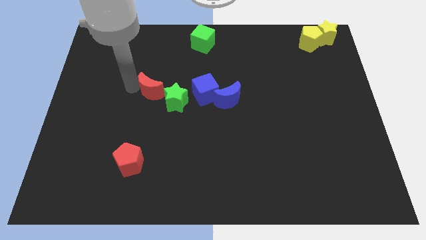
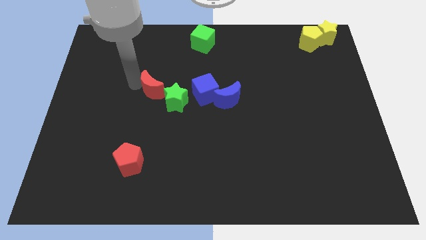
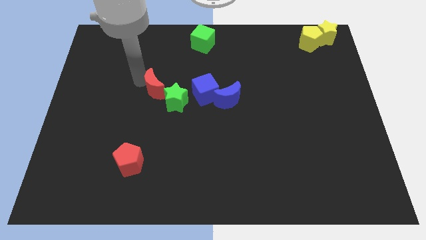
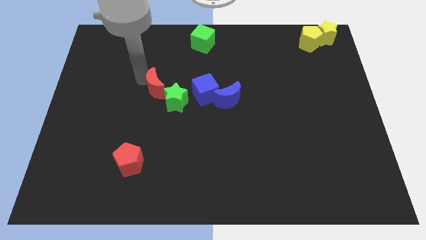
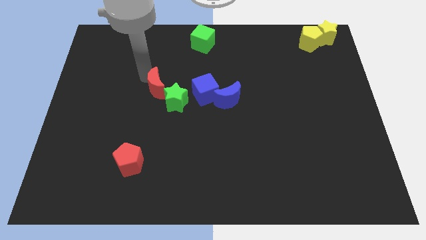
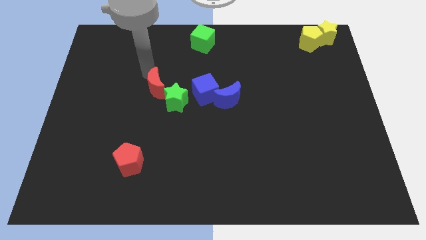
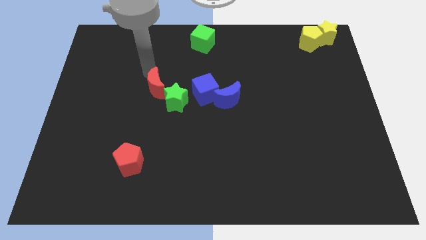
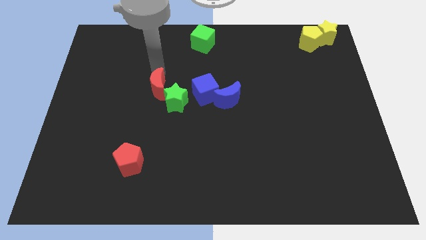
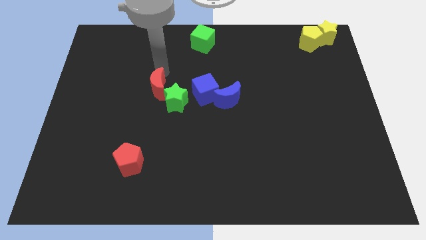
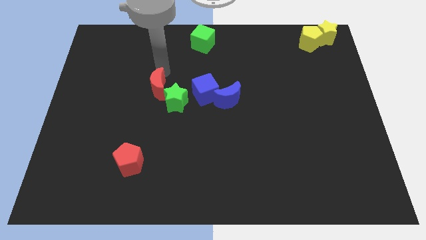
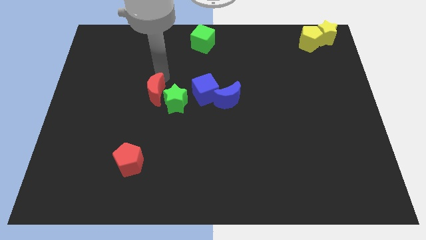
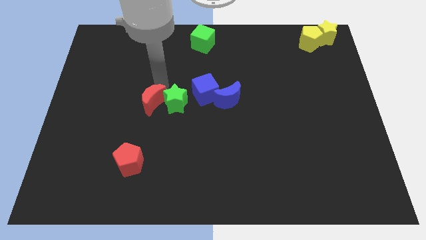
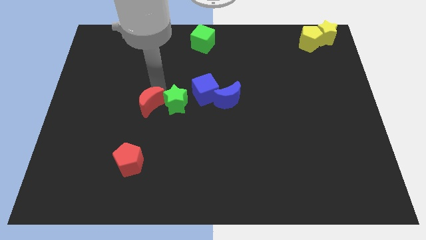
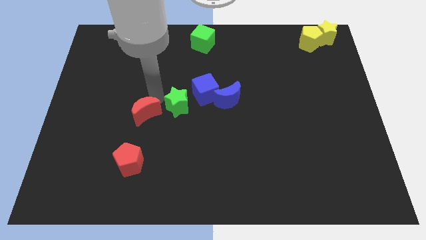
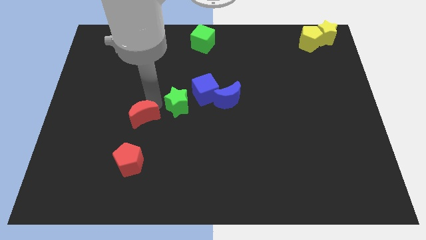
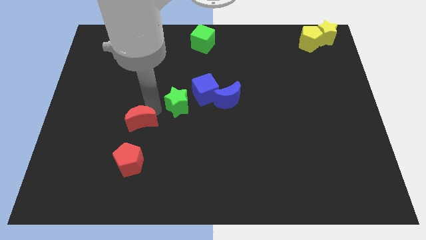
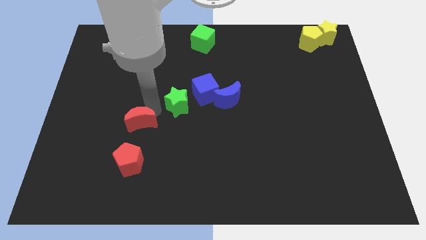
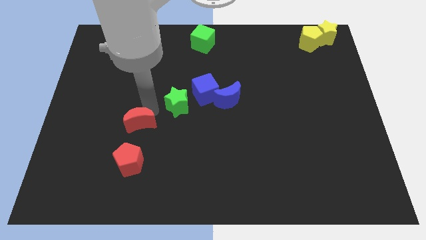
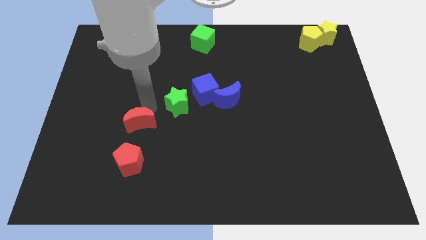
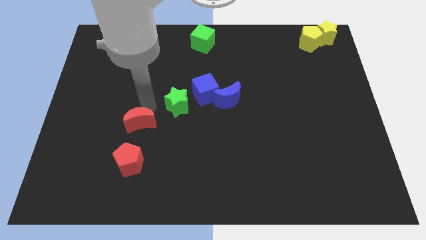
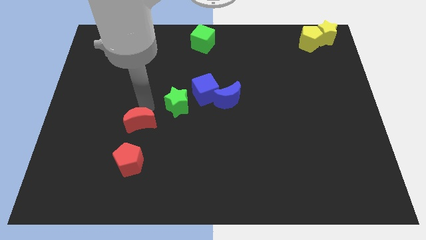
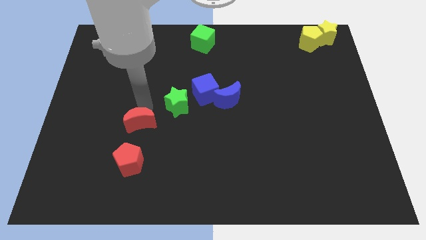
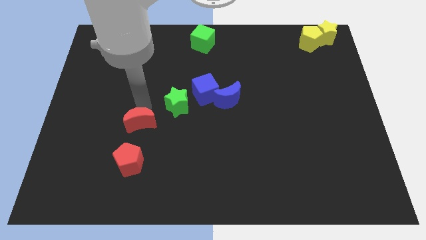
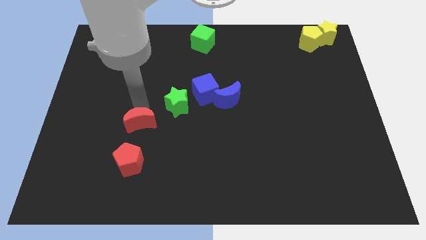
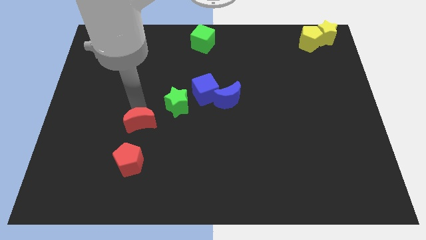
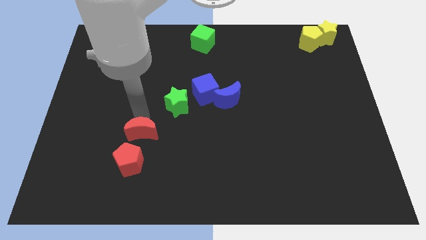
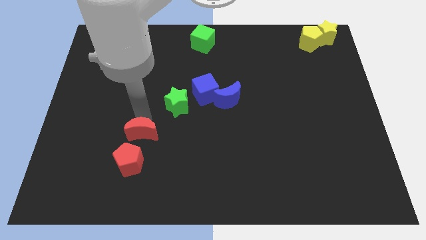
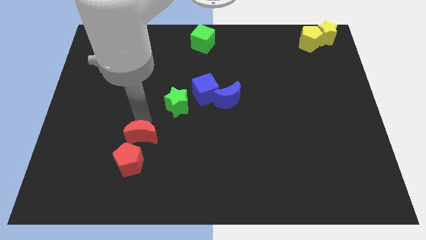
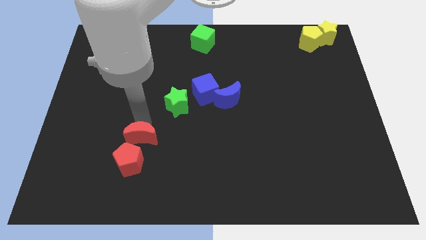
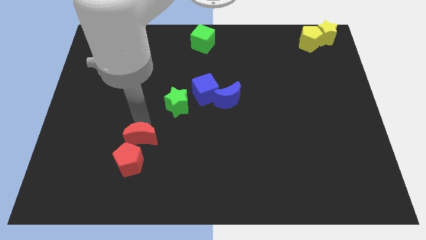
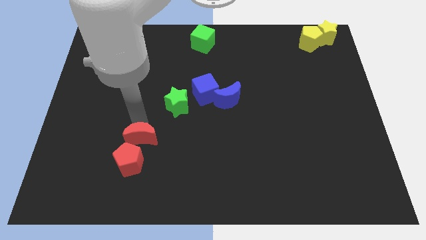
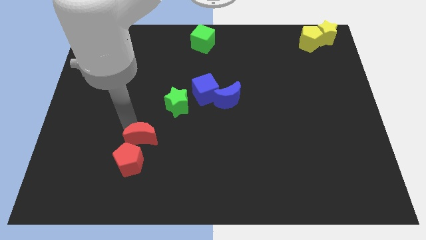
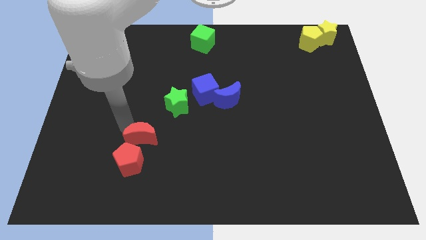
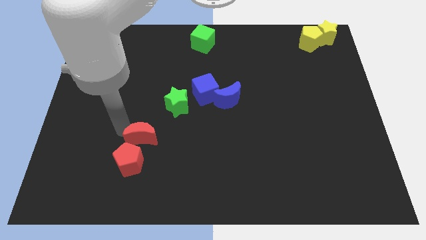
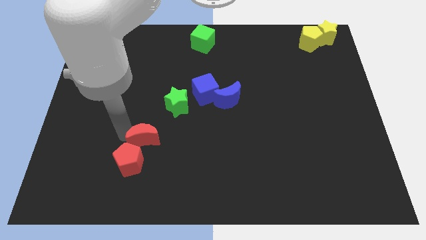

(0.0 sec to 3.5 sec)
separate red moon from green star

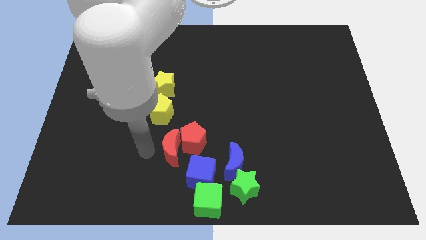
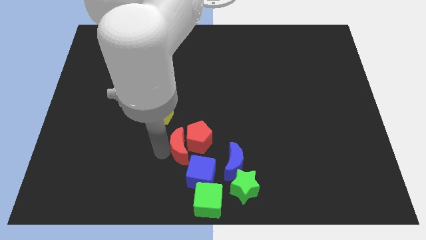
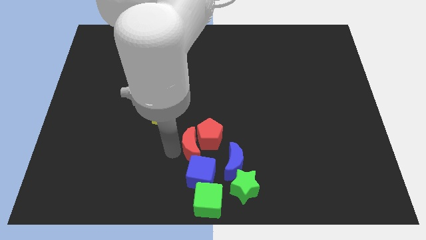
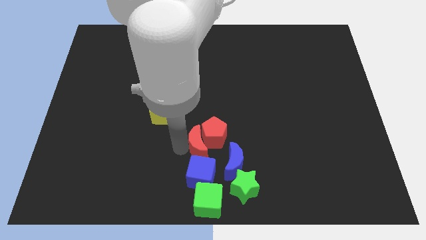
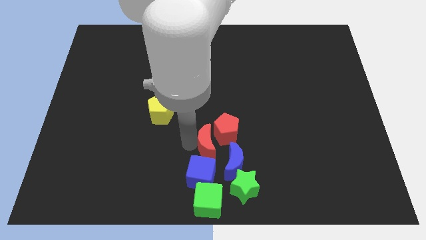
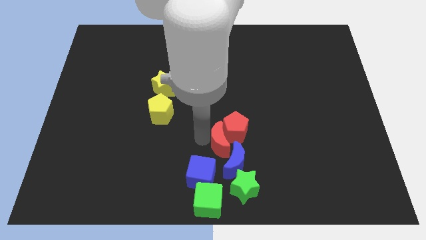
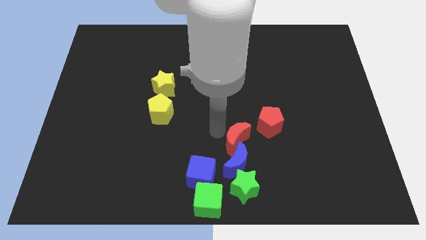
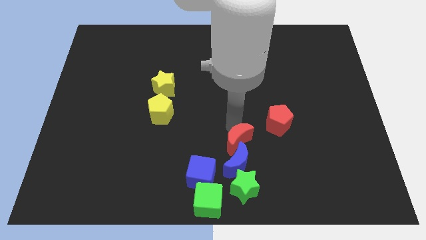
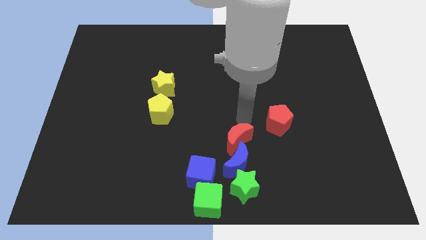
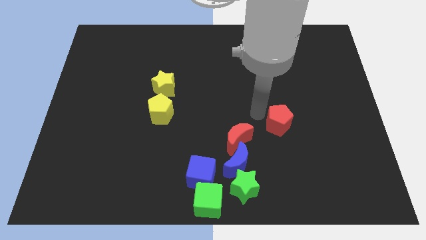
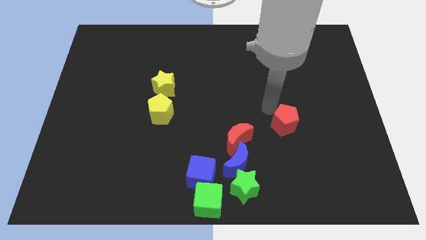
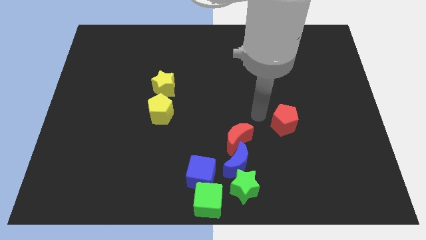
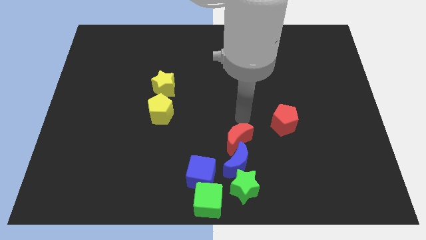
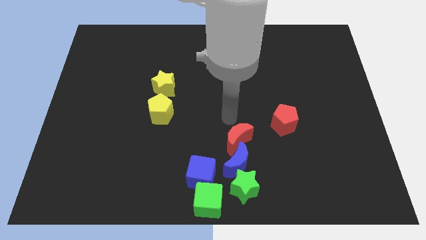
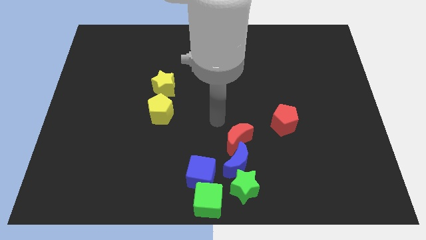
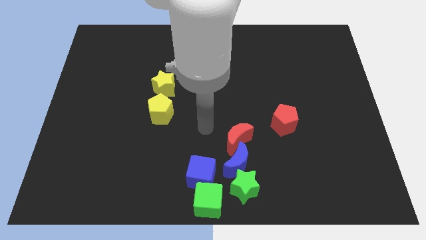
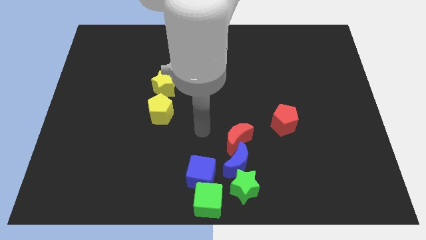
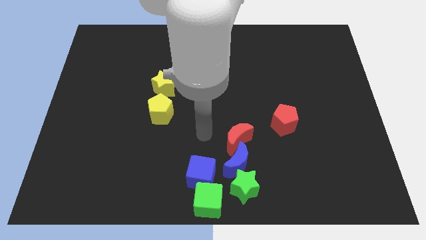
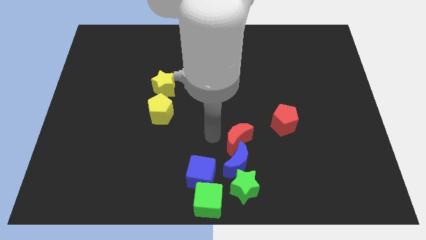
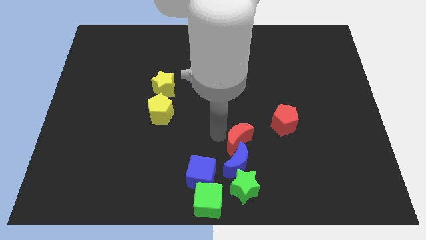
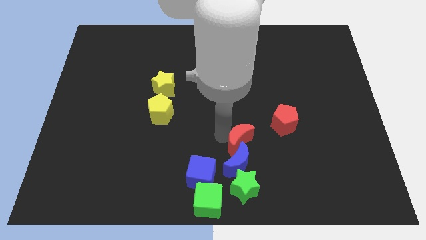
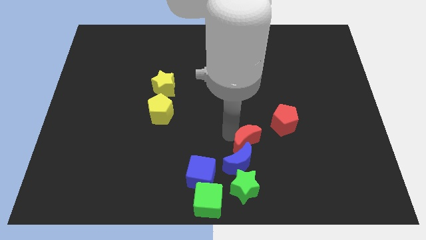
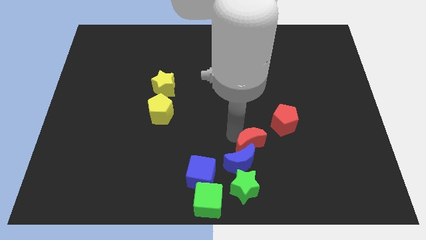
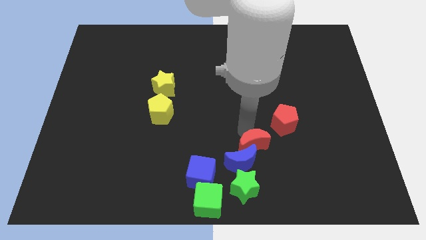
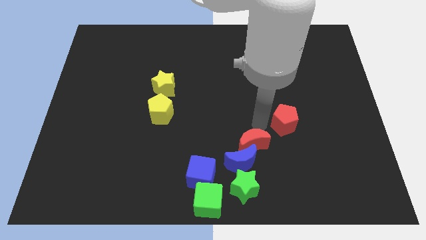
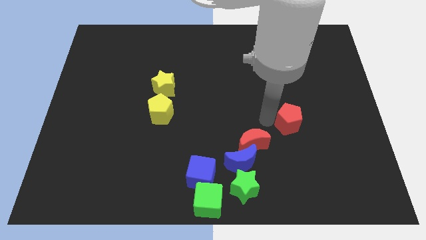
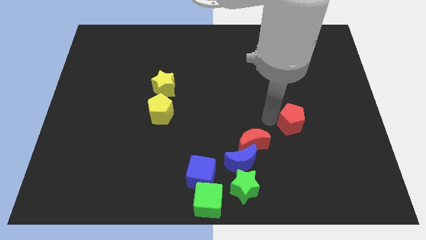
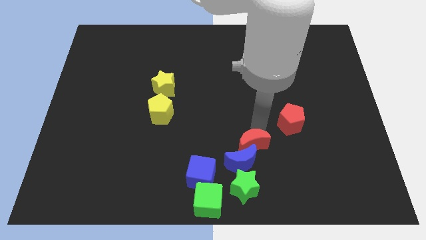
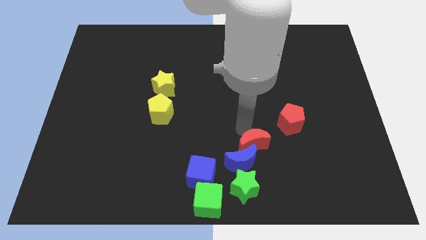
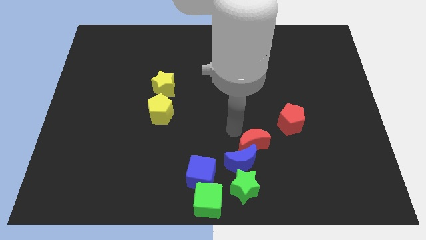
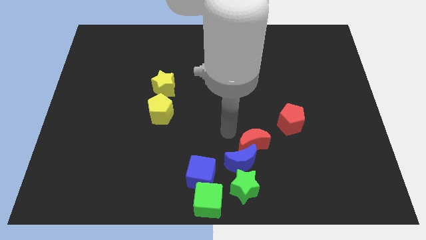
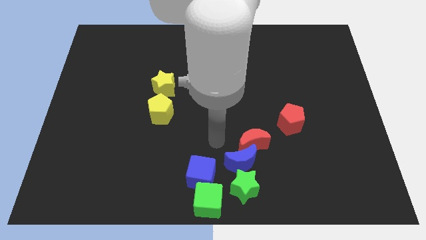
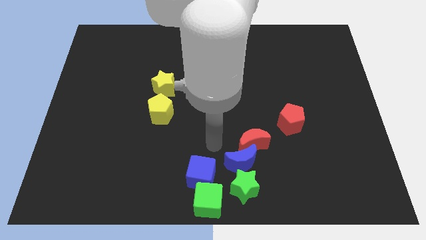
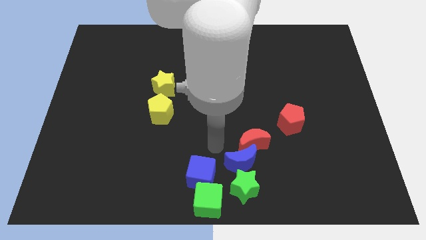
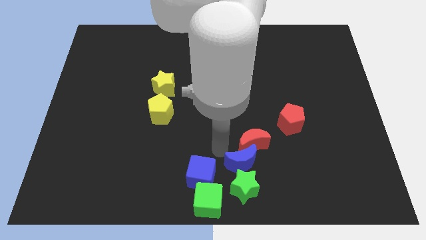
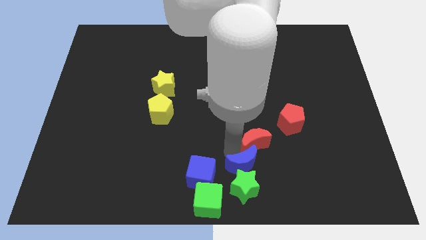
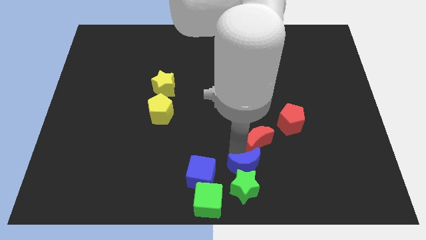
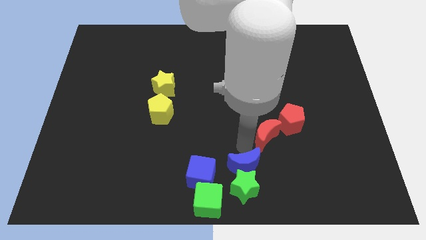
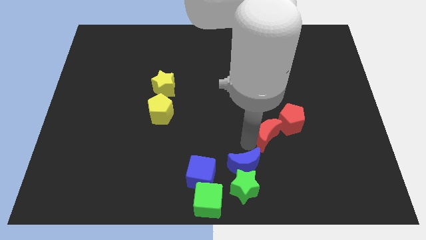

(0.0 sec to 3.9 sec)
move the red things diagonally above the top right side of the blue moon

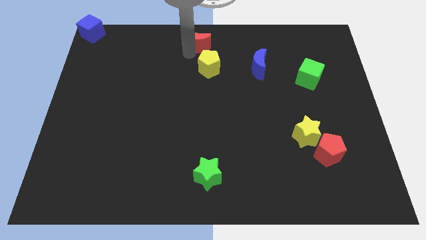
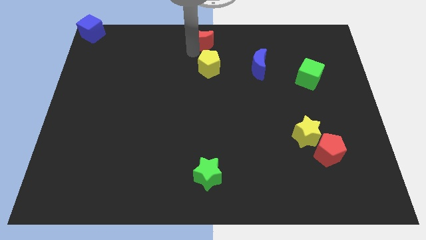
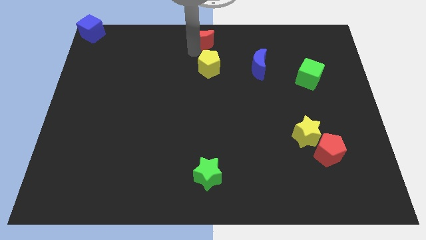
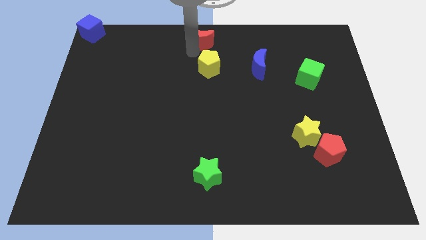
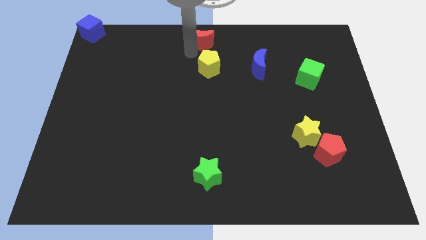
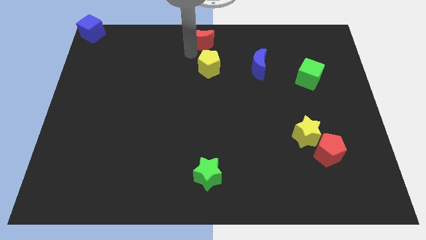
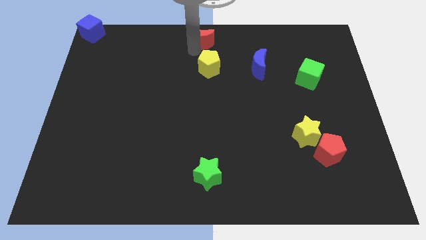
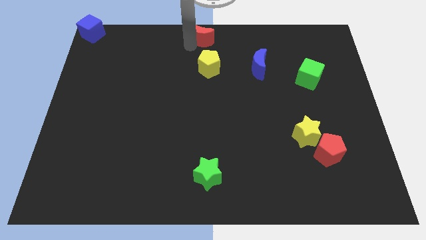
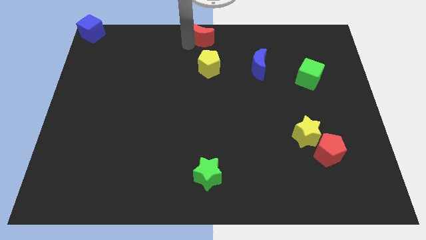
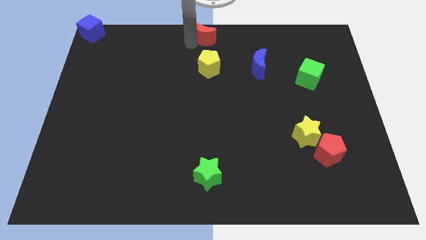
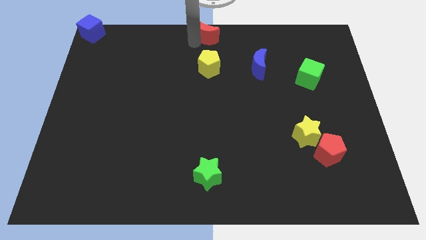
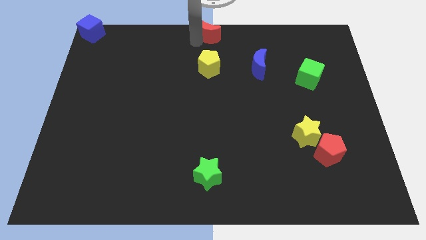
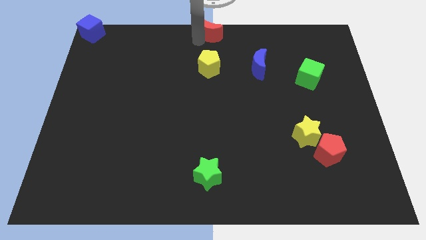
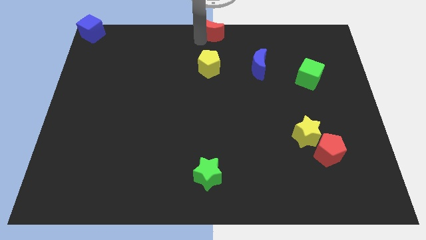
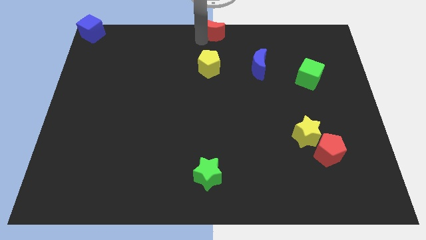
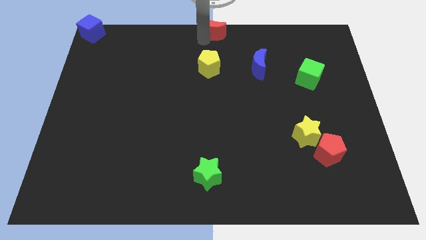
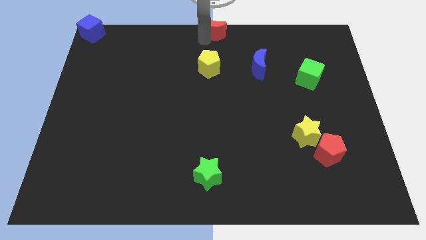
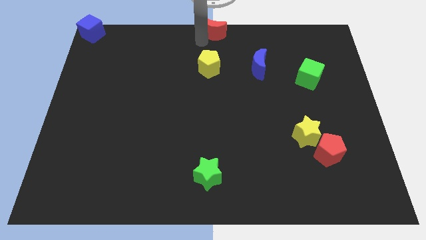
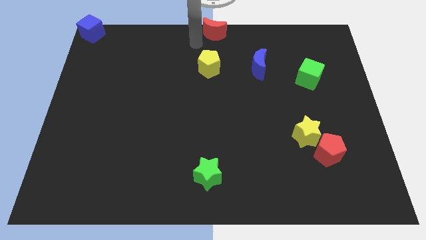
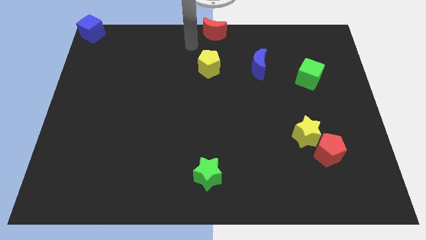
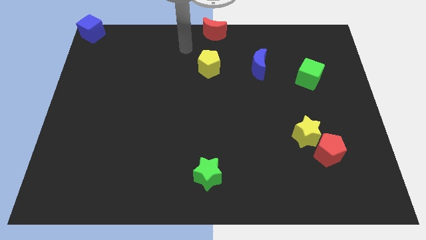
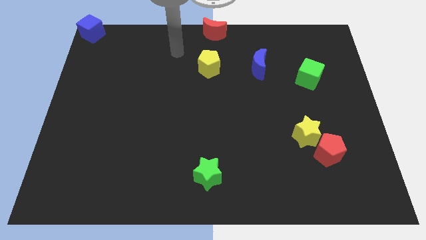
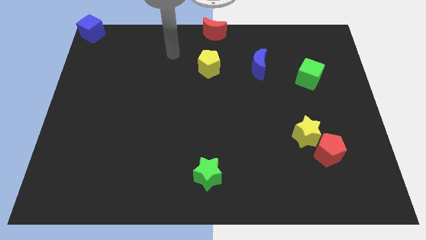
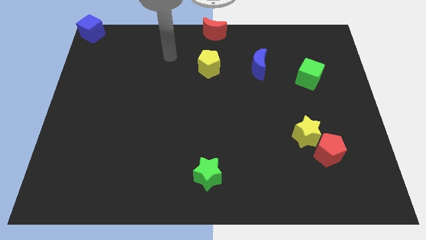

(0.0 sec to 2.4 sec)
move the red penatgon to top center of the board
